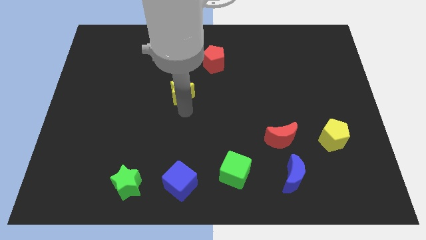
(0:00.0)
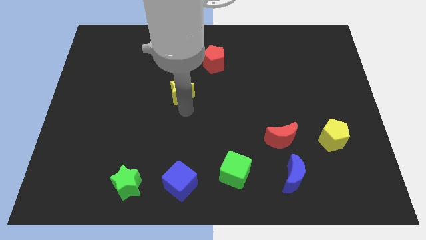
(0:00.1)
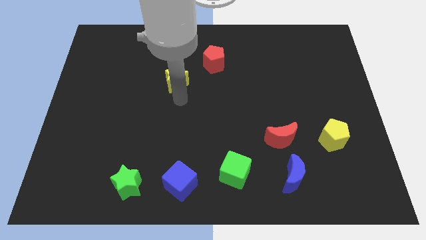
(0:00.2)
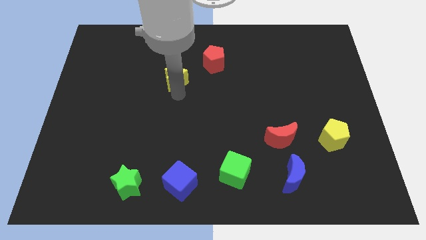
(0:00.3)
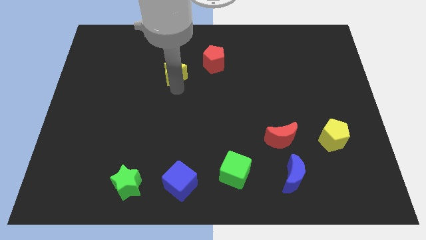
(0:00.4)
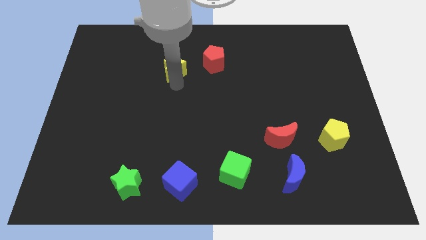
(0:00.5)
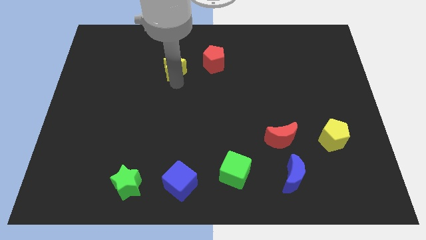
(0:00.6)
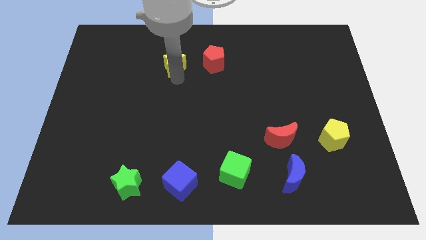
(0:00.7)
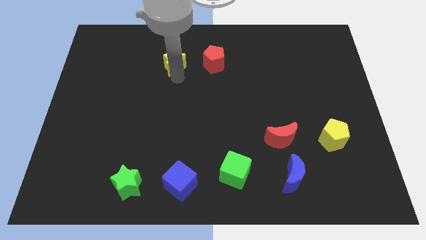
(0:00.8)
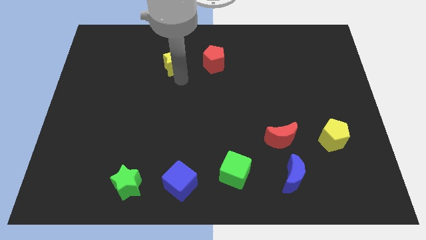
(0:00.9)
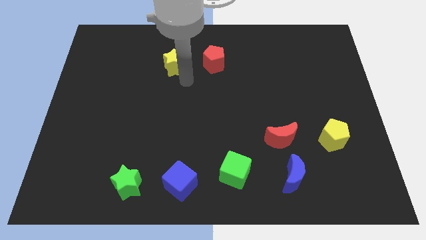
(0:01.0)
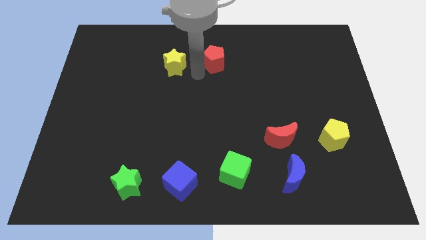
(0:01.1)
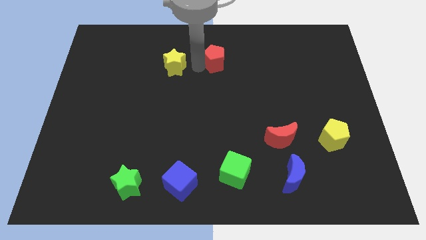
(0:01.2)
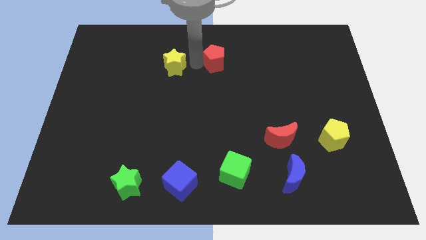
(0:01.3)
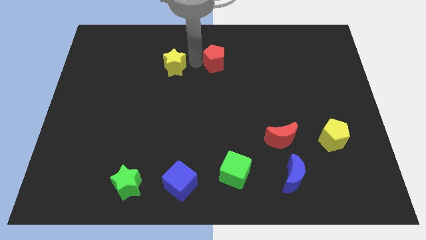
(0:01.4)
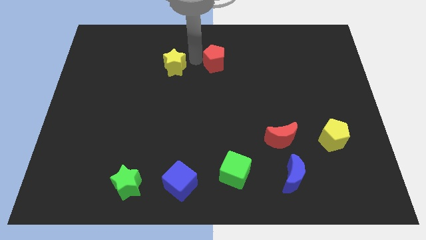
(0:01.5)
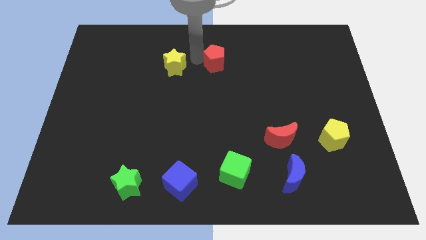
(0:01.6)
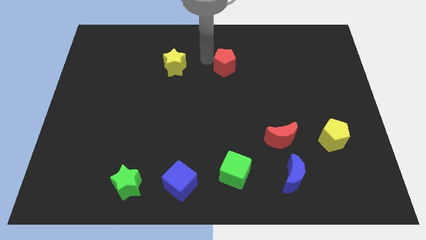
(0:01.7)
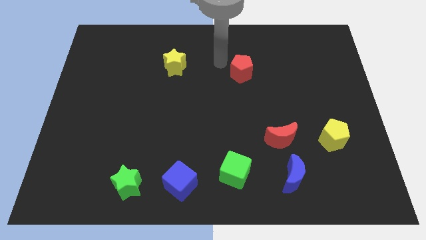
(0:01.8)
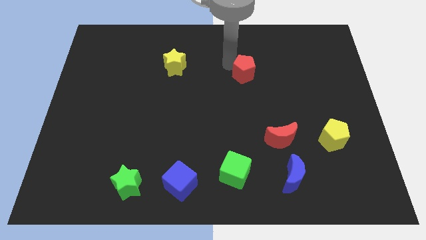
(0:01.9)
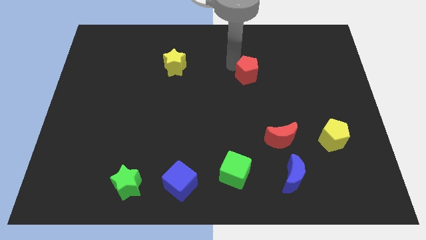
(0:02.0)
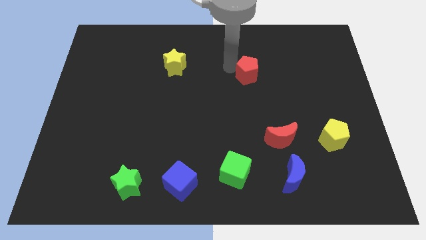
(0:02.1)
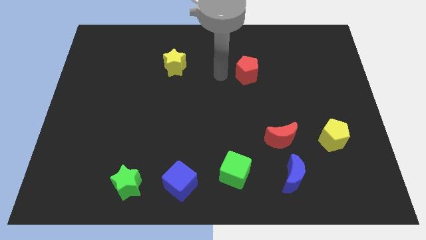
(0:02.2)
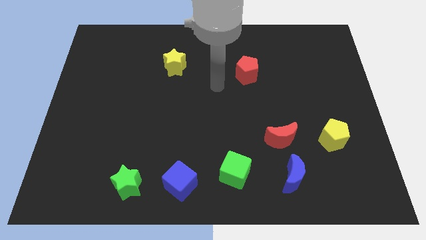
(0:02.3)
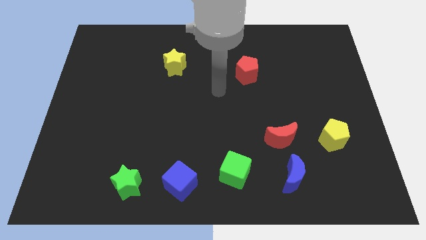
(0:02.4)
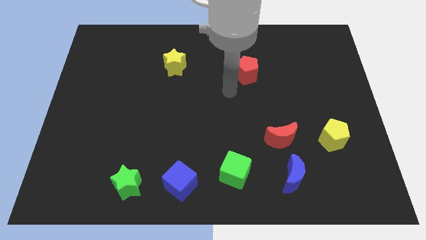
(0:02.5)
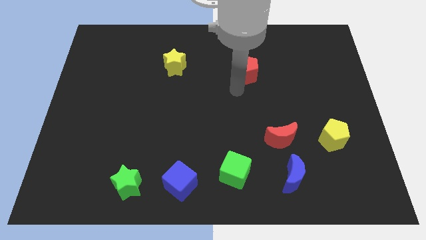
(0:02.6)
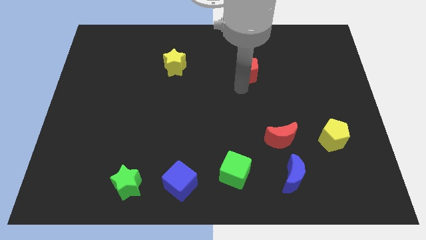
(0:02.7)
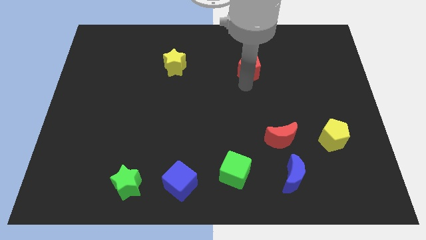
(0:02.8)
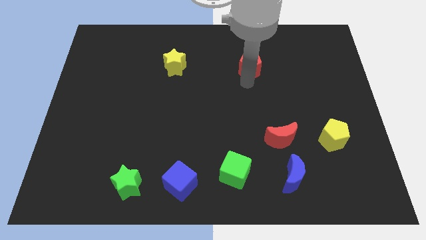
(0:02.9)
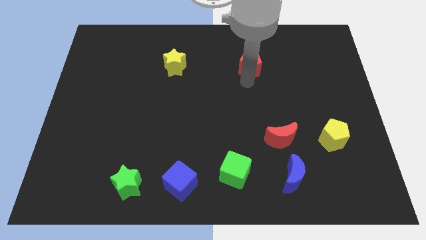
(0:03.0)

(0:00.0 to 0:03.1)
move the red pentagon to the right side of the board

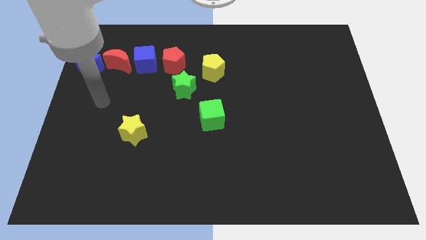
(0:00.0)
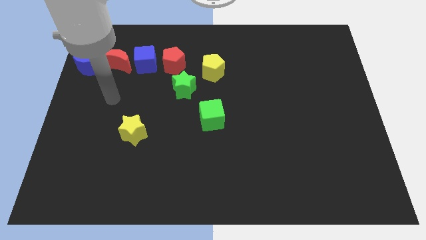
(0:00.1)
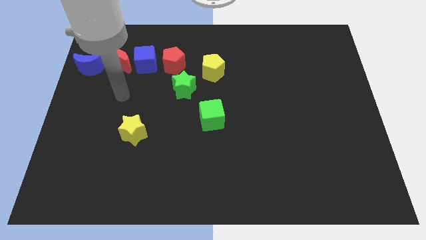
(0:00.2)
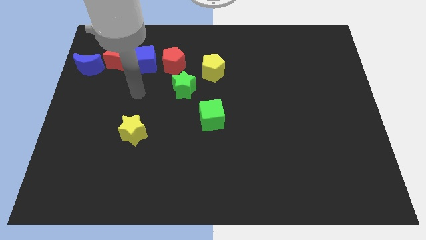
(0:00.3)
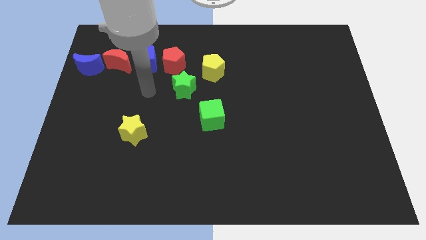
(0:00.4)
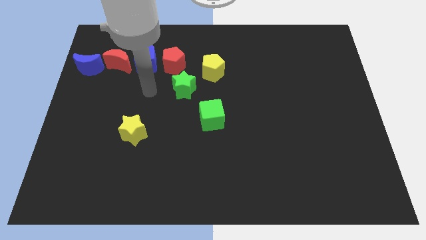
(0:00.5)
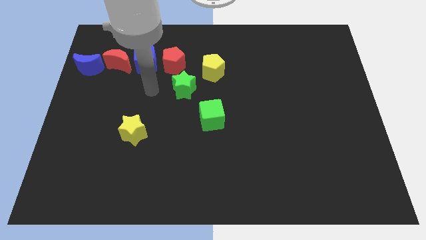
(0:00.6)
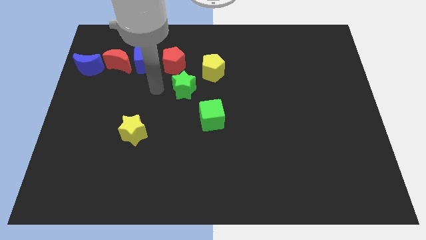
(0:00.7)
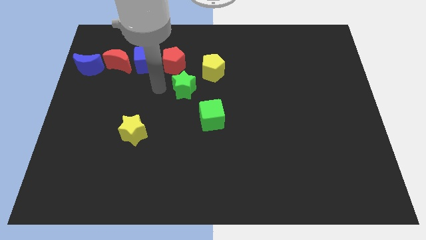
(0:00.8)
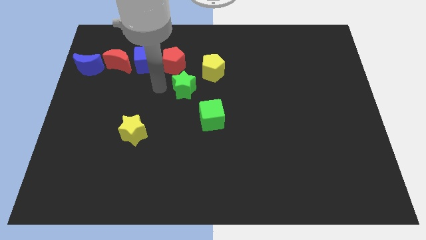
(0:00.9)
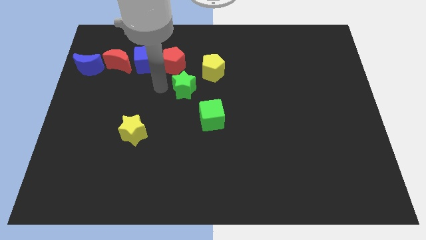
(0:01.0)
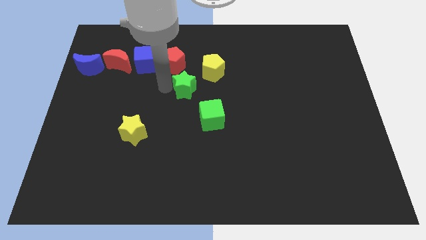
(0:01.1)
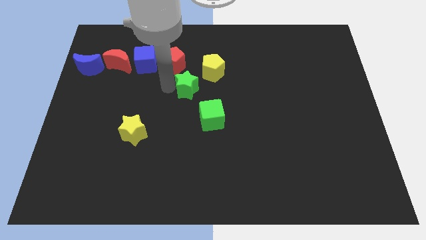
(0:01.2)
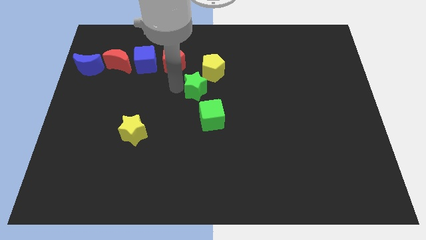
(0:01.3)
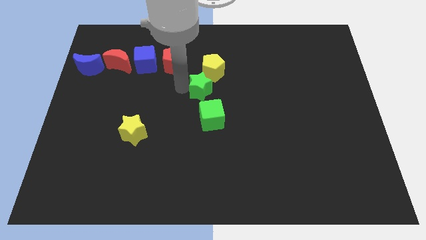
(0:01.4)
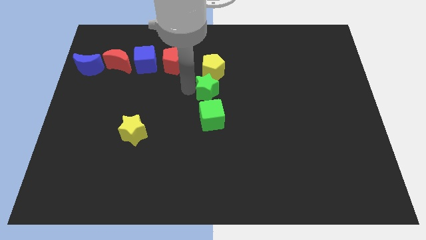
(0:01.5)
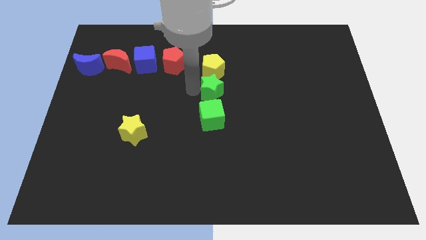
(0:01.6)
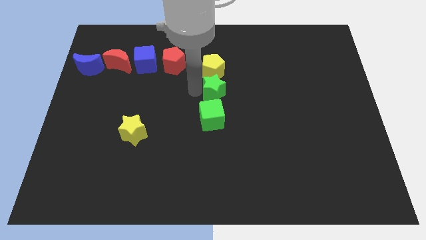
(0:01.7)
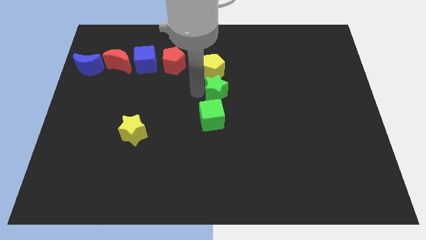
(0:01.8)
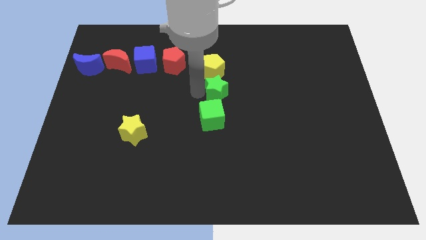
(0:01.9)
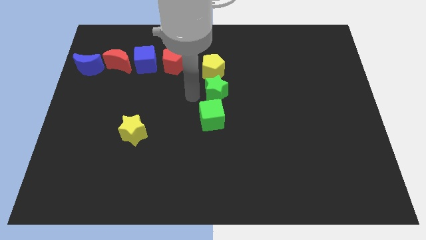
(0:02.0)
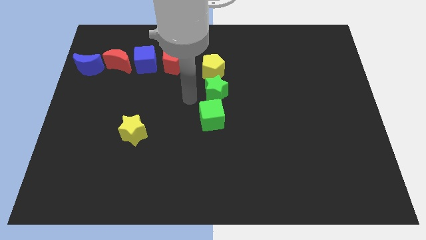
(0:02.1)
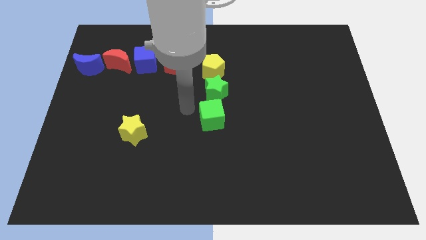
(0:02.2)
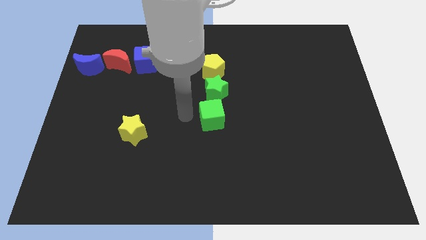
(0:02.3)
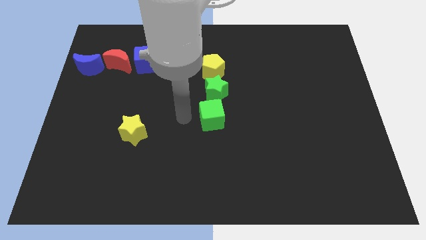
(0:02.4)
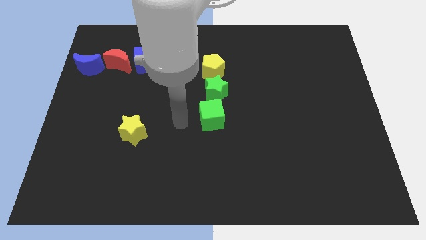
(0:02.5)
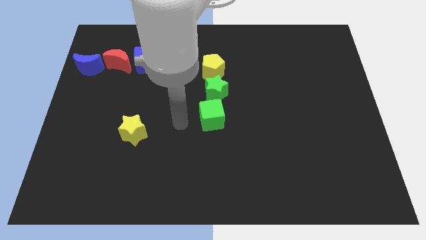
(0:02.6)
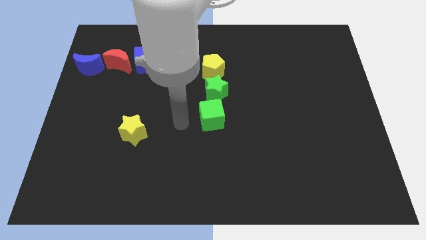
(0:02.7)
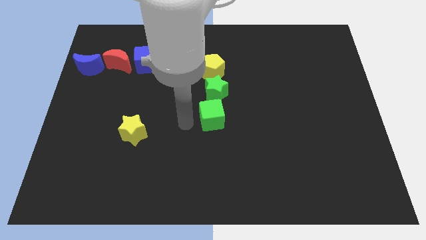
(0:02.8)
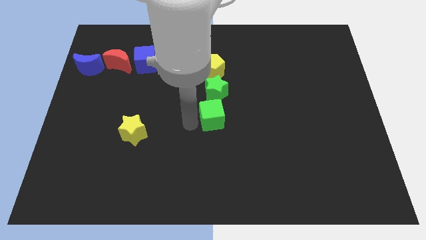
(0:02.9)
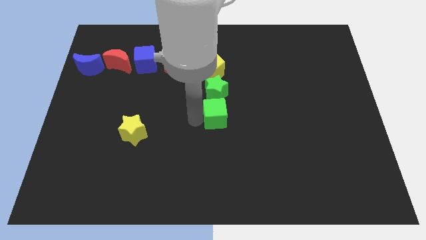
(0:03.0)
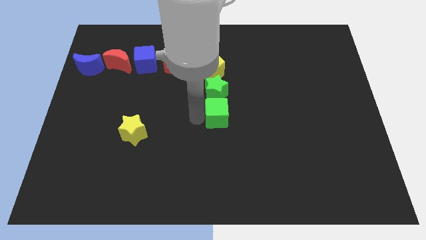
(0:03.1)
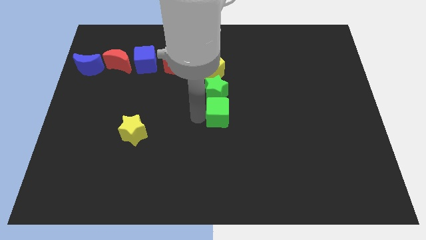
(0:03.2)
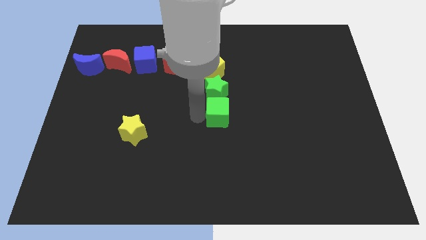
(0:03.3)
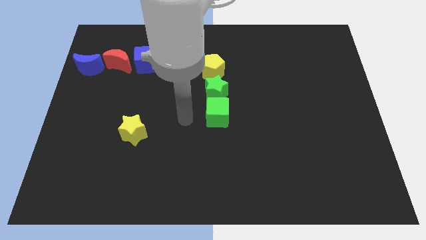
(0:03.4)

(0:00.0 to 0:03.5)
adjust the green star and green cube vertically in line below the yellow pentagon

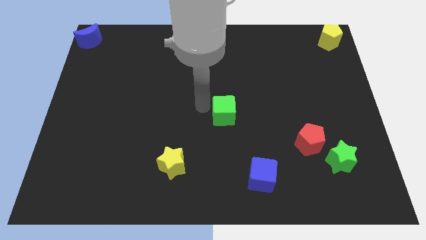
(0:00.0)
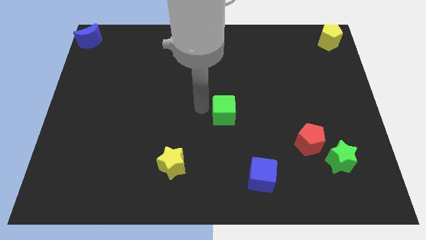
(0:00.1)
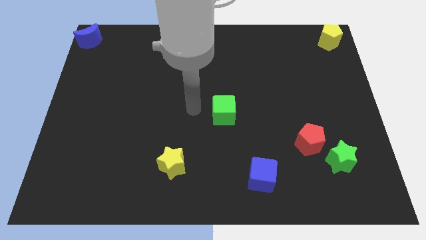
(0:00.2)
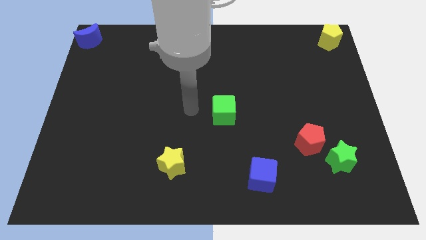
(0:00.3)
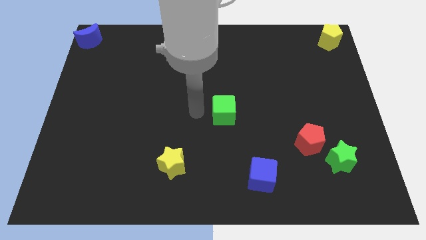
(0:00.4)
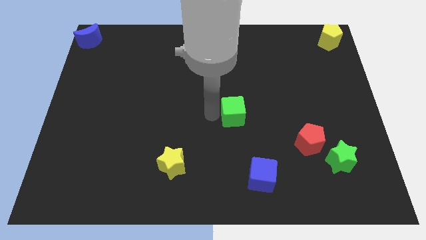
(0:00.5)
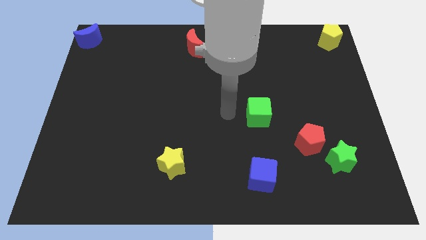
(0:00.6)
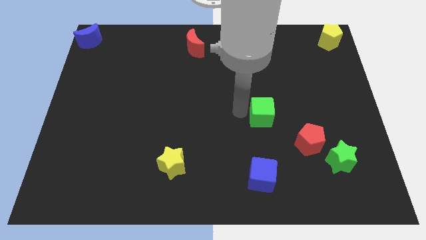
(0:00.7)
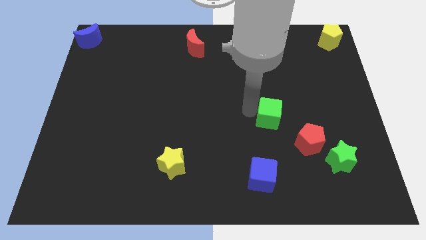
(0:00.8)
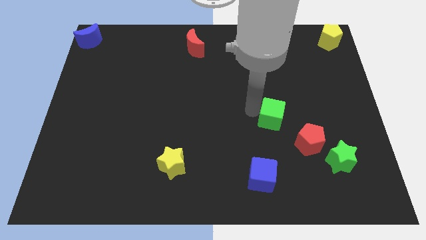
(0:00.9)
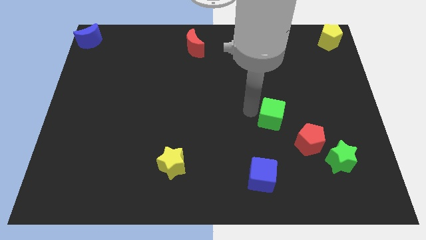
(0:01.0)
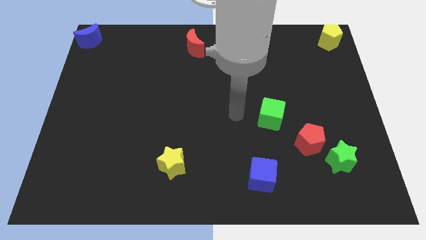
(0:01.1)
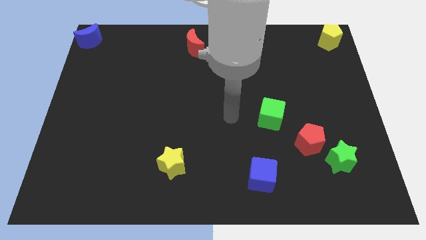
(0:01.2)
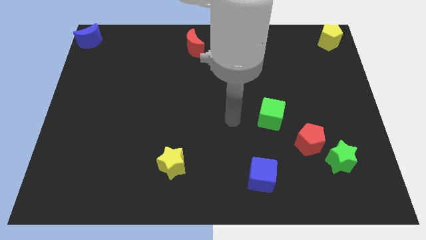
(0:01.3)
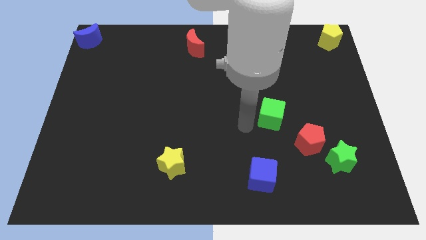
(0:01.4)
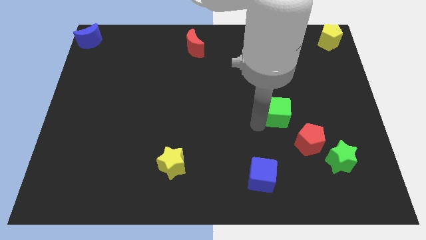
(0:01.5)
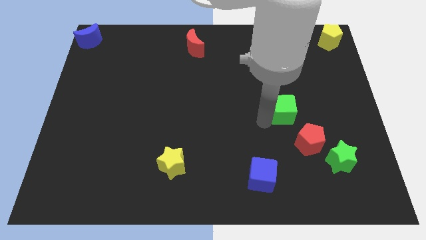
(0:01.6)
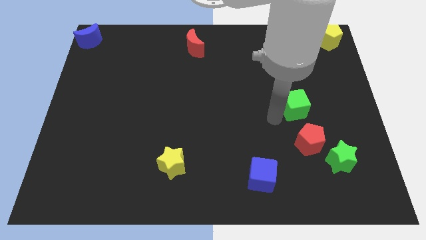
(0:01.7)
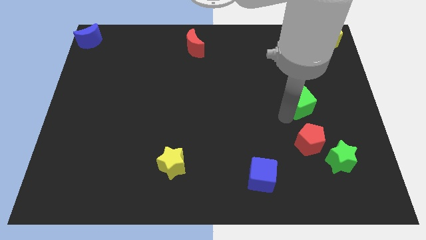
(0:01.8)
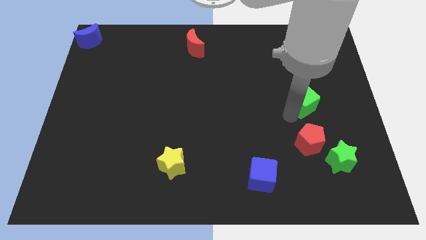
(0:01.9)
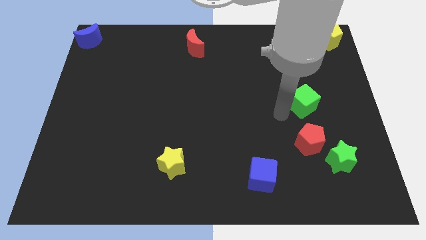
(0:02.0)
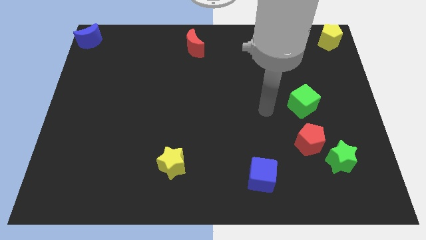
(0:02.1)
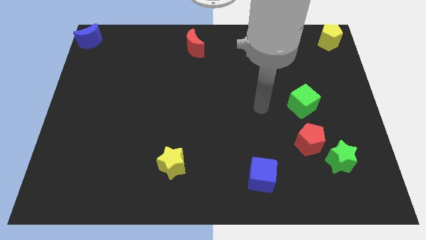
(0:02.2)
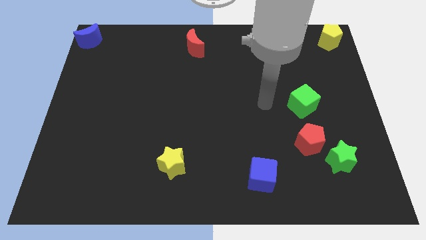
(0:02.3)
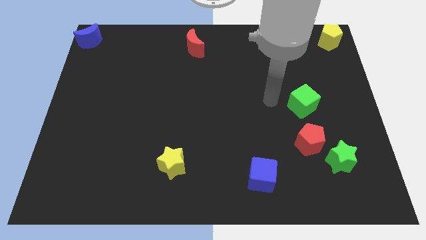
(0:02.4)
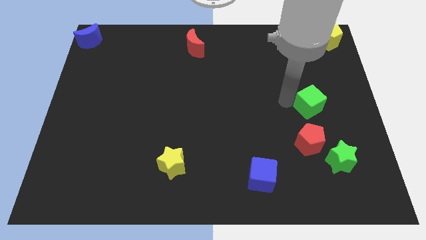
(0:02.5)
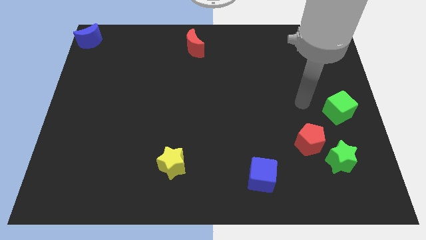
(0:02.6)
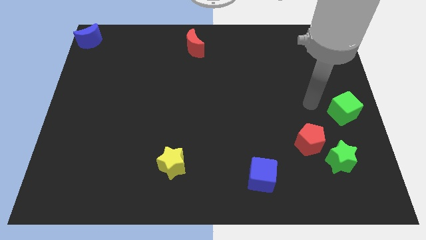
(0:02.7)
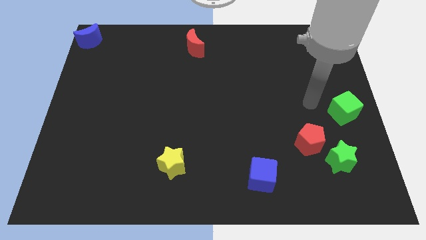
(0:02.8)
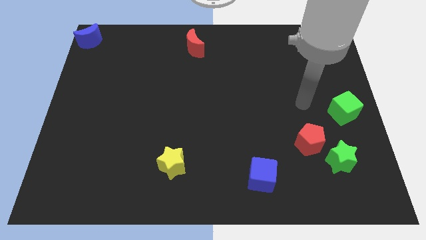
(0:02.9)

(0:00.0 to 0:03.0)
move the green cube to the top of the green star
